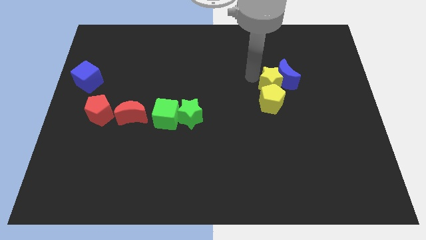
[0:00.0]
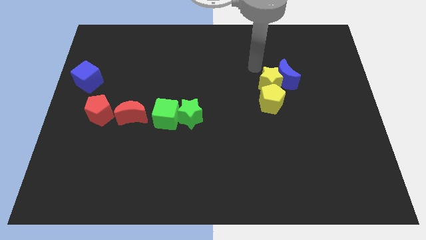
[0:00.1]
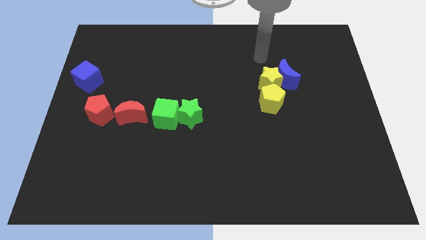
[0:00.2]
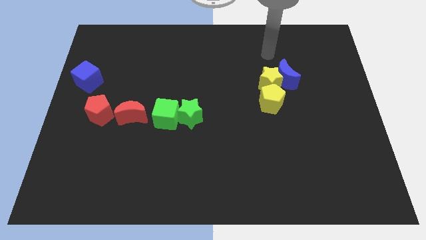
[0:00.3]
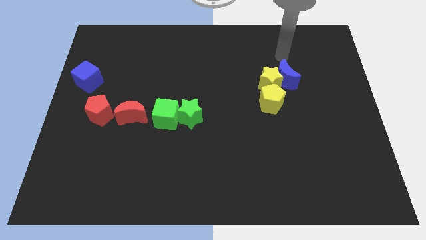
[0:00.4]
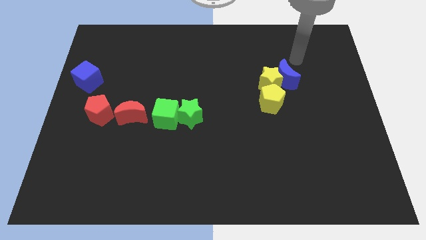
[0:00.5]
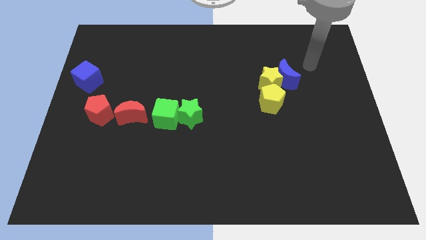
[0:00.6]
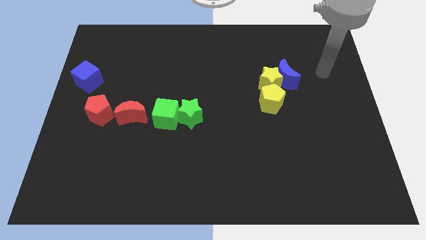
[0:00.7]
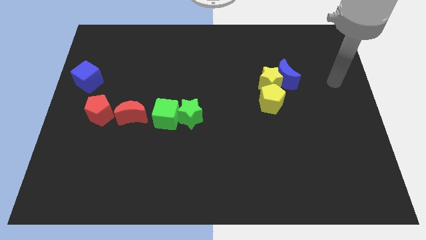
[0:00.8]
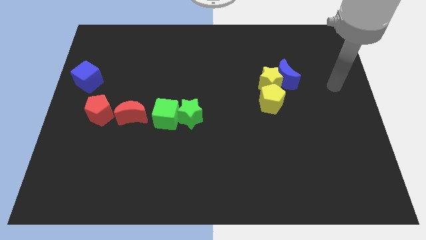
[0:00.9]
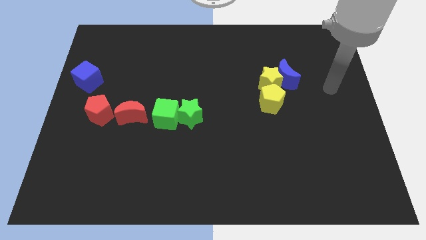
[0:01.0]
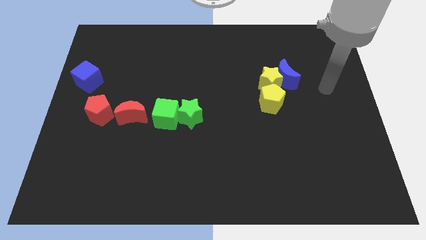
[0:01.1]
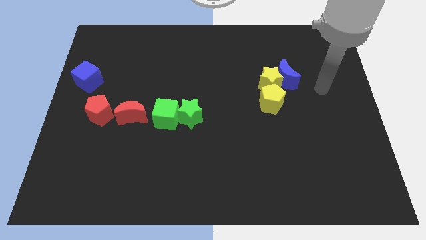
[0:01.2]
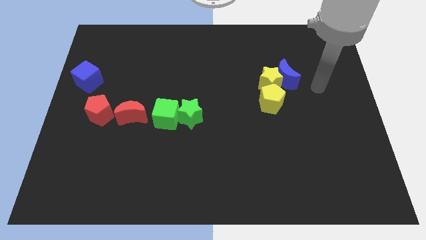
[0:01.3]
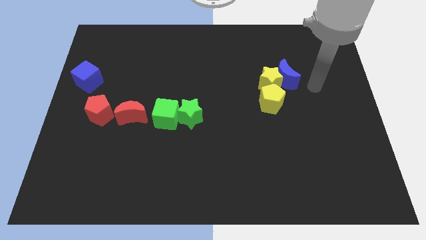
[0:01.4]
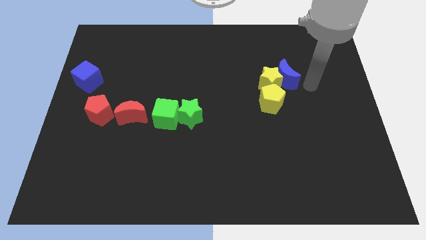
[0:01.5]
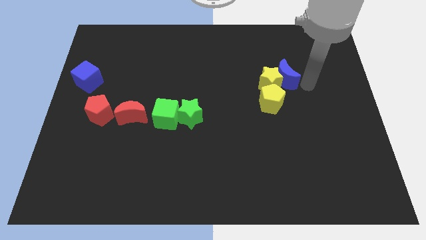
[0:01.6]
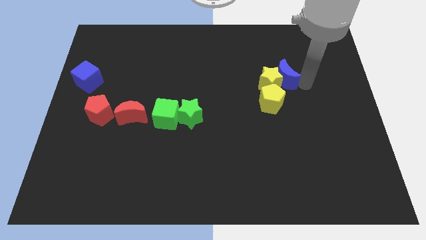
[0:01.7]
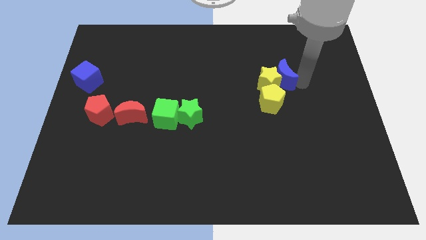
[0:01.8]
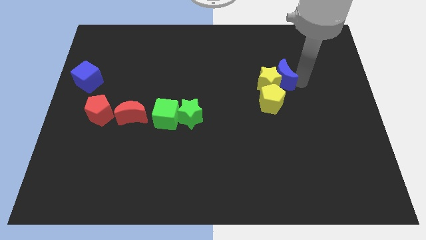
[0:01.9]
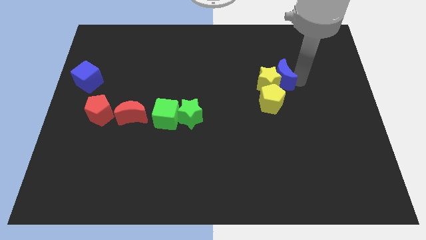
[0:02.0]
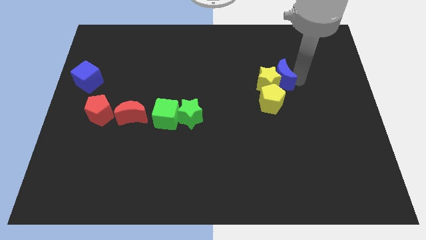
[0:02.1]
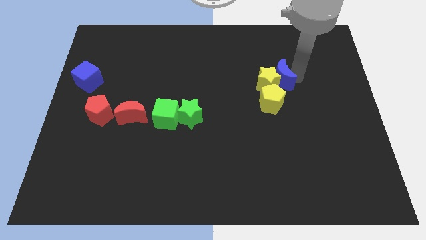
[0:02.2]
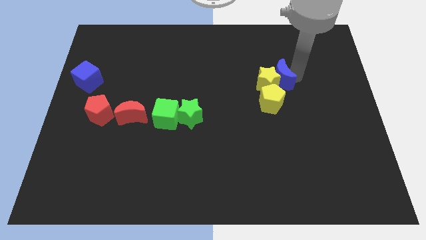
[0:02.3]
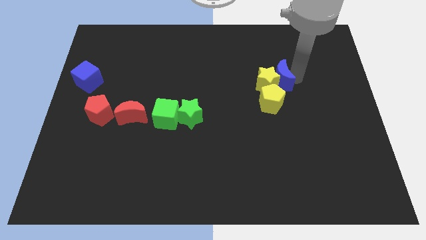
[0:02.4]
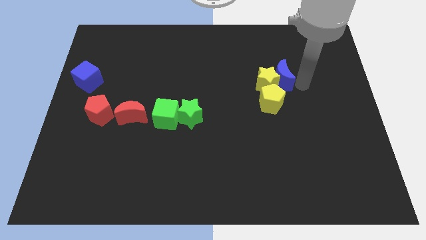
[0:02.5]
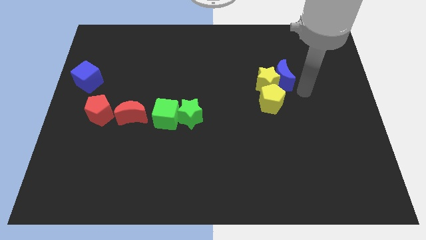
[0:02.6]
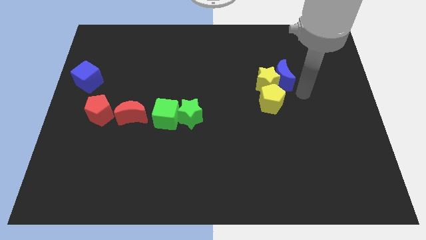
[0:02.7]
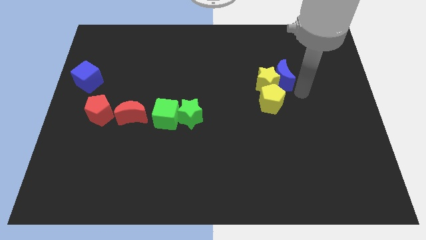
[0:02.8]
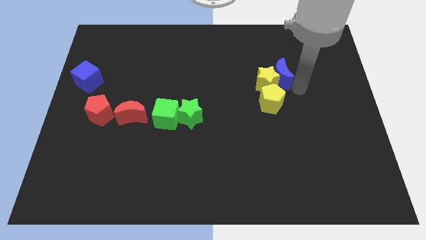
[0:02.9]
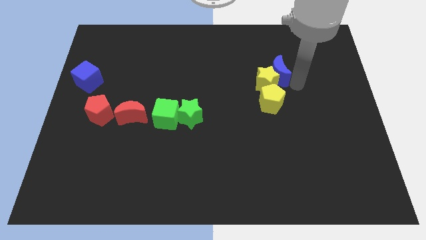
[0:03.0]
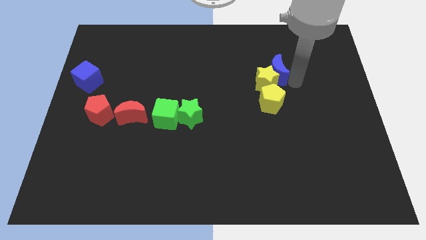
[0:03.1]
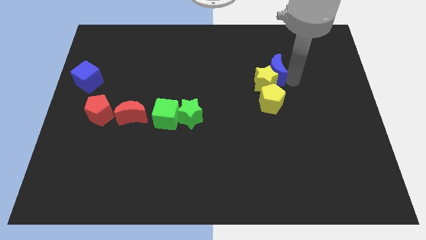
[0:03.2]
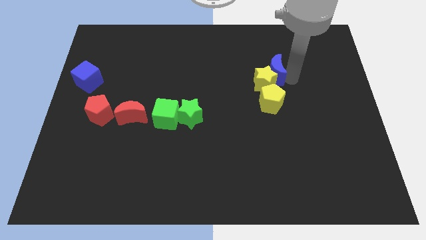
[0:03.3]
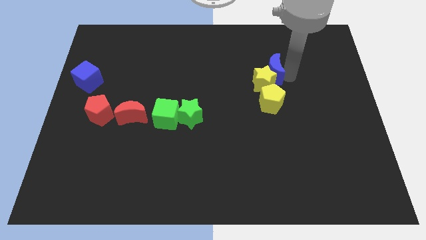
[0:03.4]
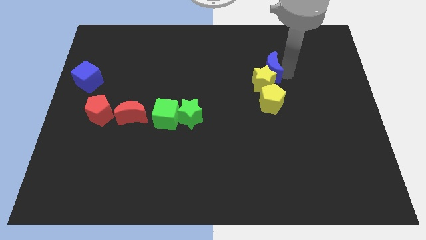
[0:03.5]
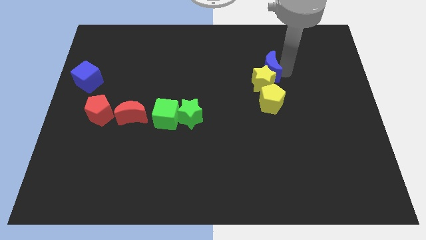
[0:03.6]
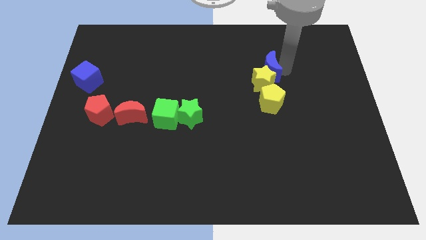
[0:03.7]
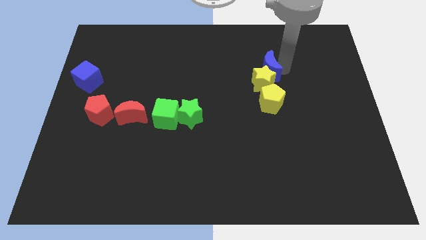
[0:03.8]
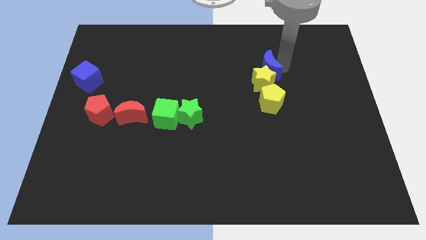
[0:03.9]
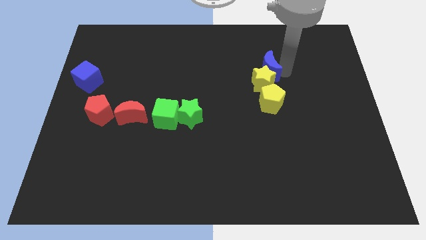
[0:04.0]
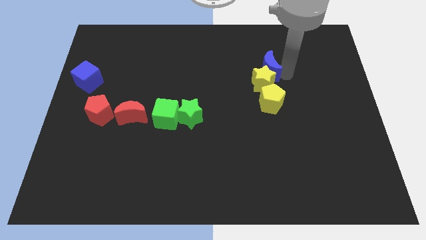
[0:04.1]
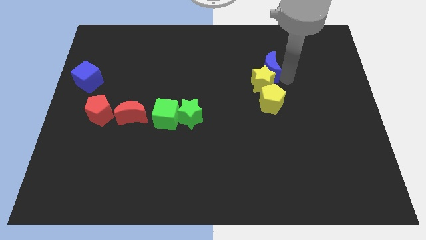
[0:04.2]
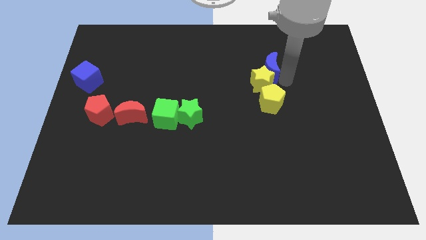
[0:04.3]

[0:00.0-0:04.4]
push the blue crescent slightly to the top

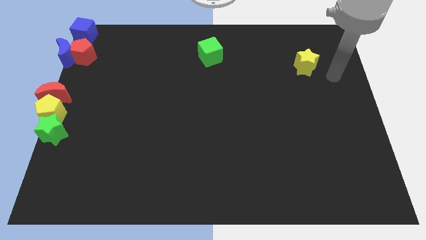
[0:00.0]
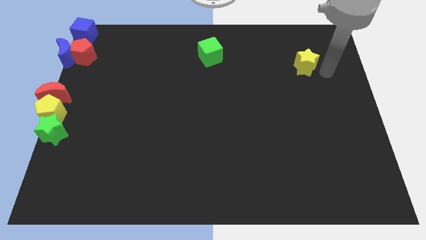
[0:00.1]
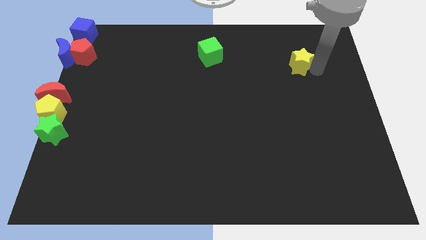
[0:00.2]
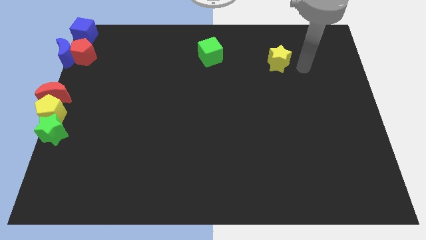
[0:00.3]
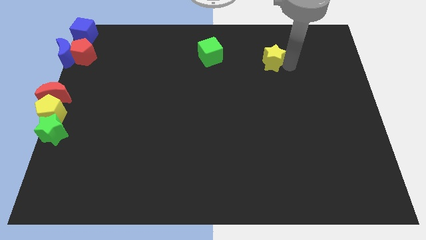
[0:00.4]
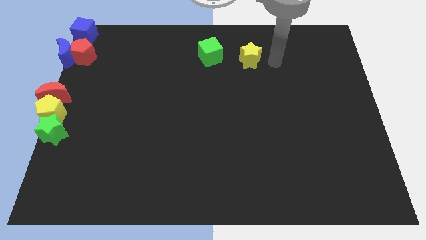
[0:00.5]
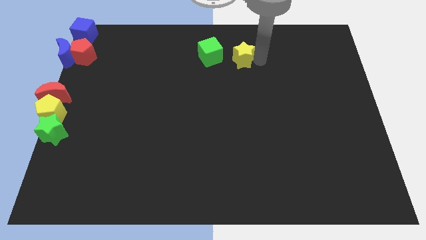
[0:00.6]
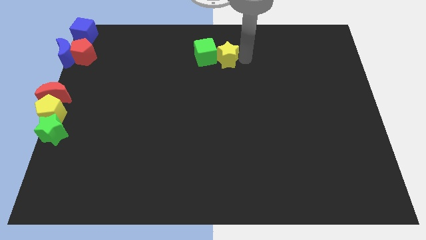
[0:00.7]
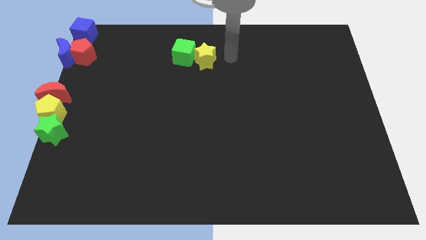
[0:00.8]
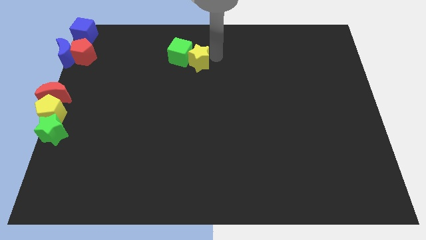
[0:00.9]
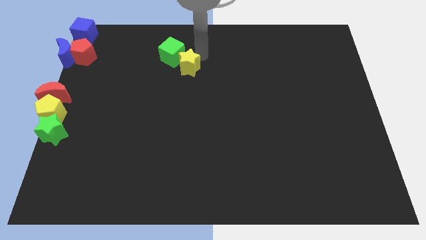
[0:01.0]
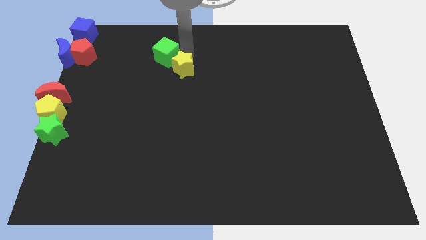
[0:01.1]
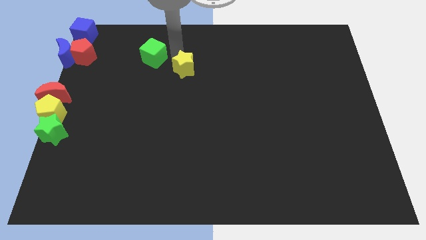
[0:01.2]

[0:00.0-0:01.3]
push the yellow star into the green cube

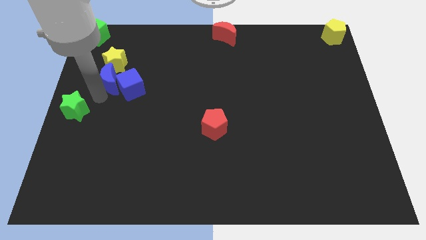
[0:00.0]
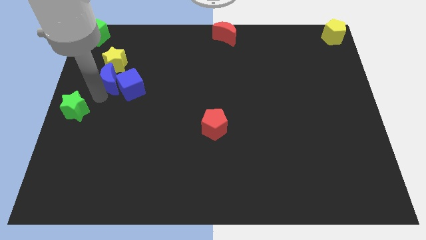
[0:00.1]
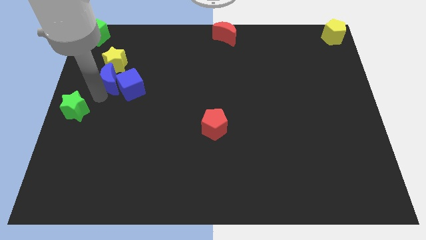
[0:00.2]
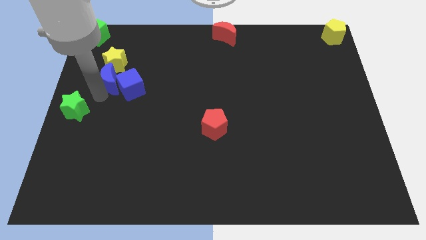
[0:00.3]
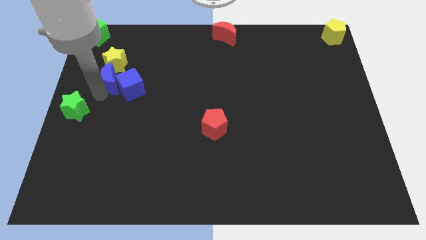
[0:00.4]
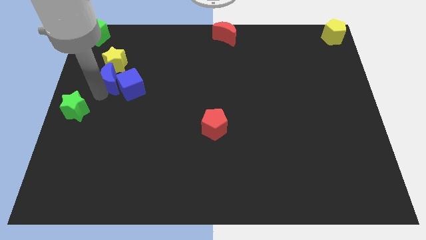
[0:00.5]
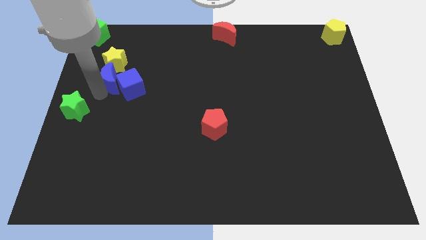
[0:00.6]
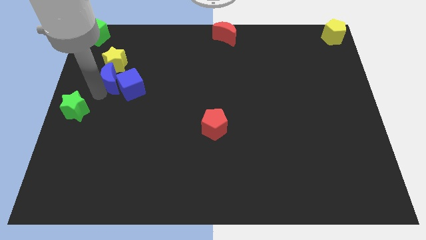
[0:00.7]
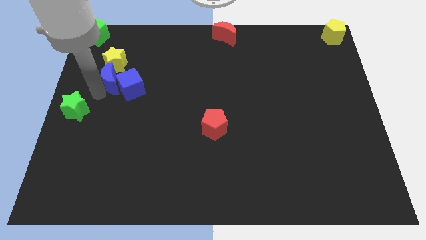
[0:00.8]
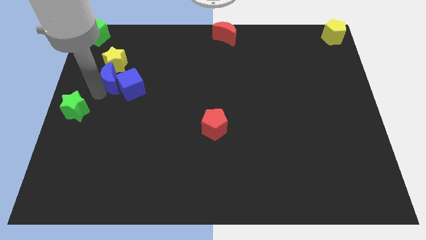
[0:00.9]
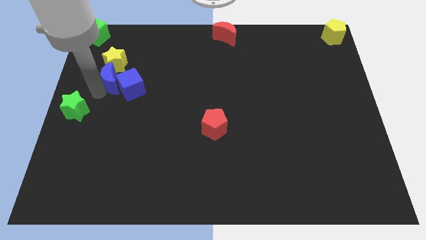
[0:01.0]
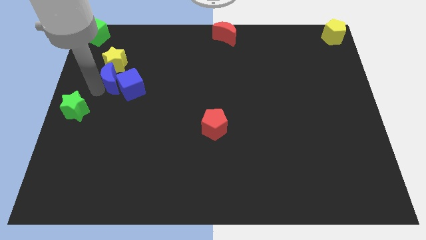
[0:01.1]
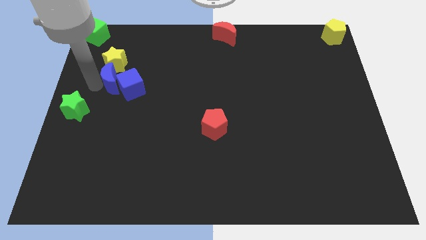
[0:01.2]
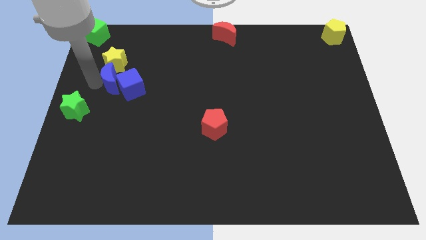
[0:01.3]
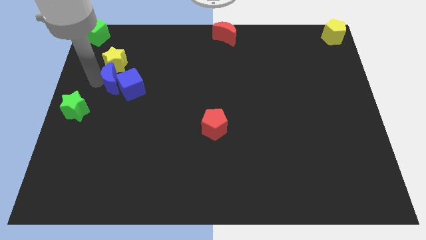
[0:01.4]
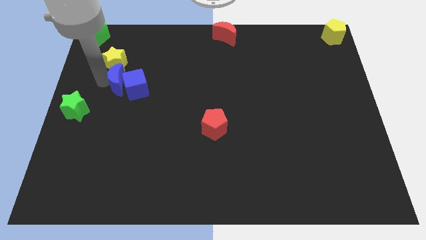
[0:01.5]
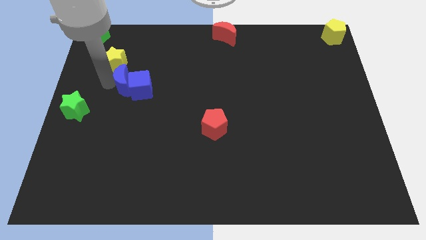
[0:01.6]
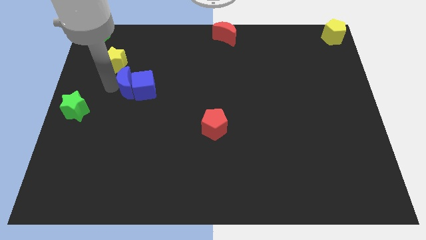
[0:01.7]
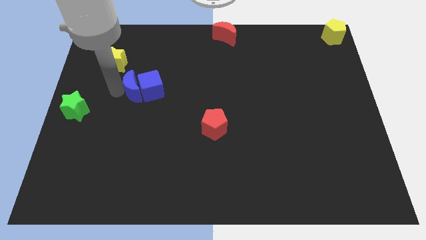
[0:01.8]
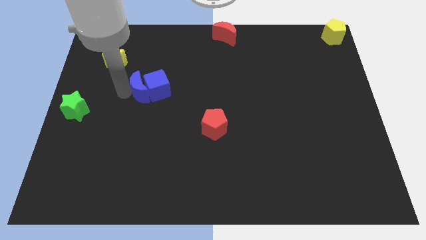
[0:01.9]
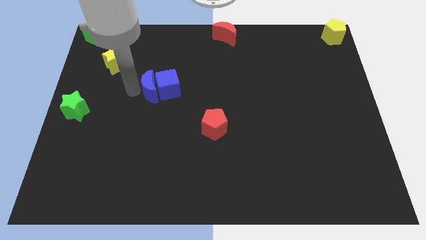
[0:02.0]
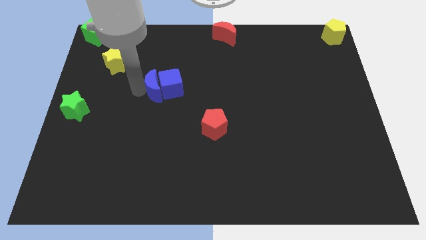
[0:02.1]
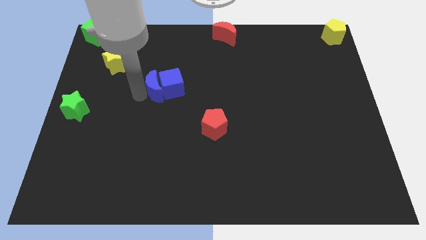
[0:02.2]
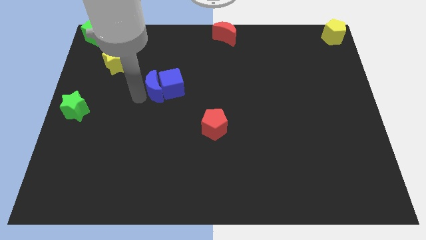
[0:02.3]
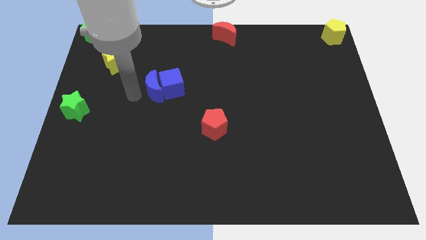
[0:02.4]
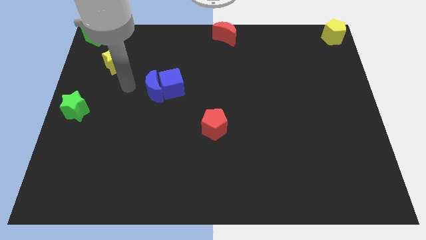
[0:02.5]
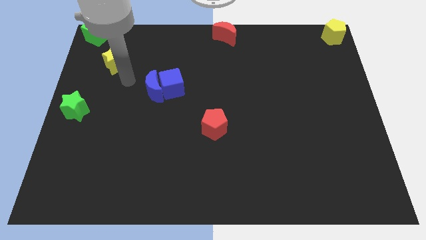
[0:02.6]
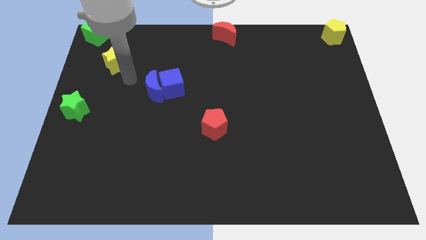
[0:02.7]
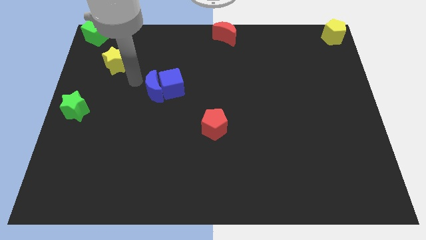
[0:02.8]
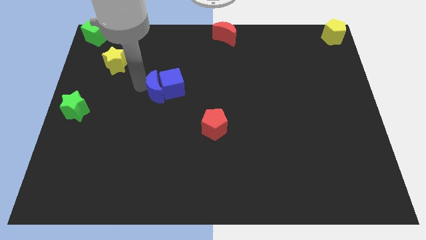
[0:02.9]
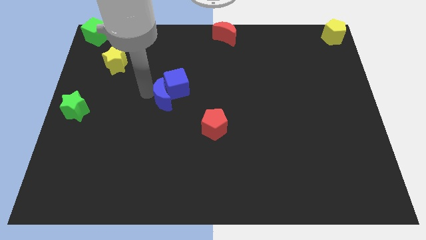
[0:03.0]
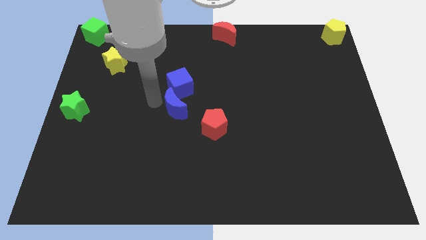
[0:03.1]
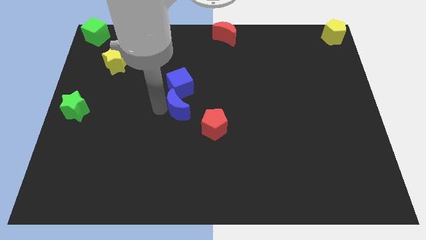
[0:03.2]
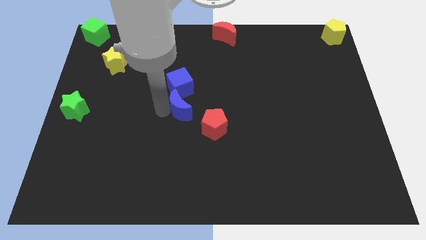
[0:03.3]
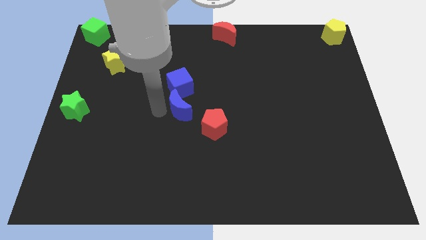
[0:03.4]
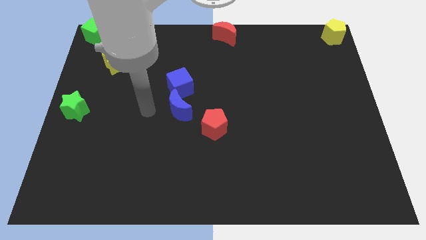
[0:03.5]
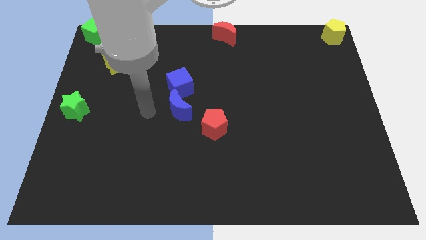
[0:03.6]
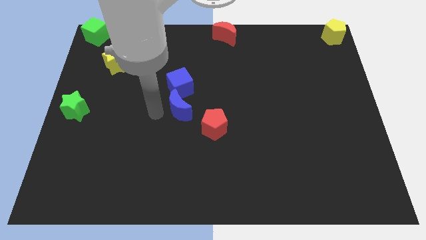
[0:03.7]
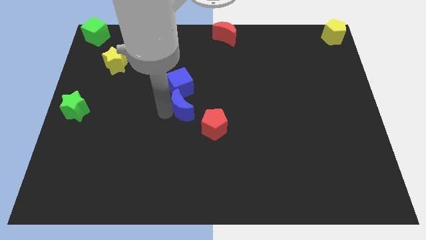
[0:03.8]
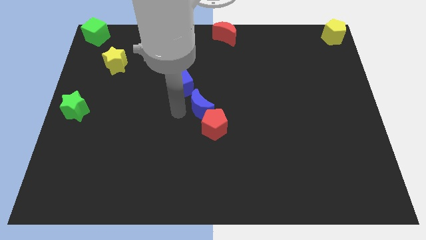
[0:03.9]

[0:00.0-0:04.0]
push both the blue blocks to the top left side of the red pentagon
